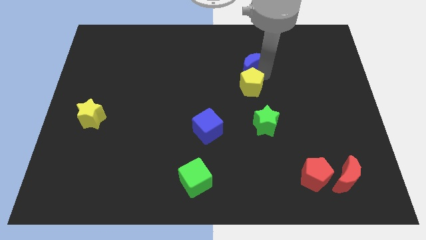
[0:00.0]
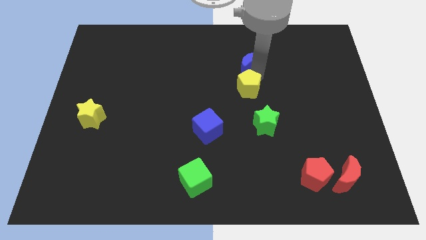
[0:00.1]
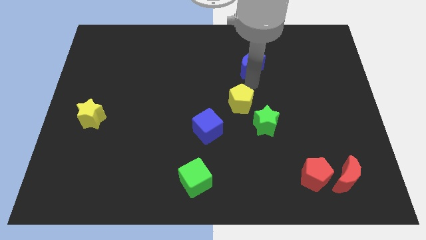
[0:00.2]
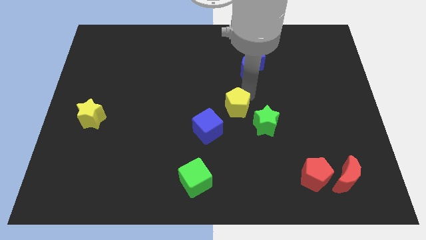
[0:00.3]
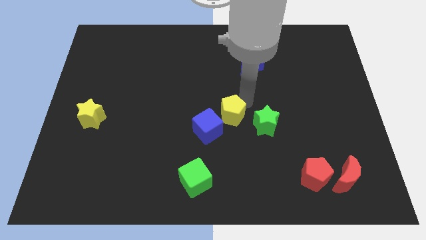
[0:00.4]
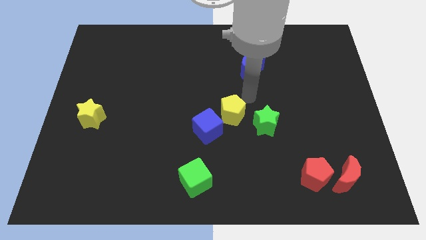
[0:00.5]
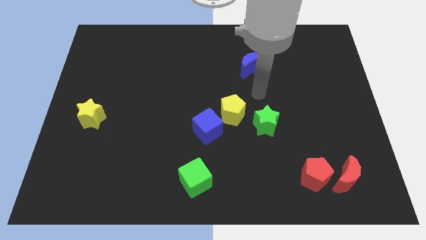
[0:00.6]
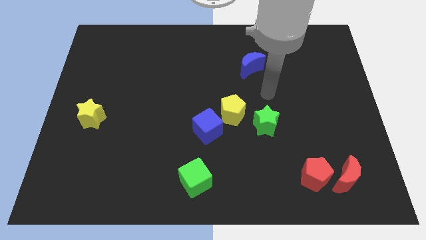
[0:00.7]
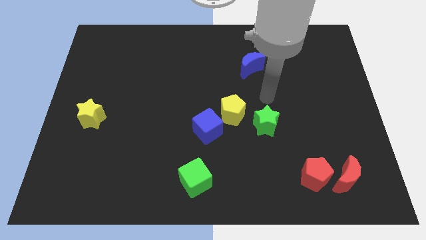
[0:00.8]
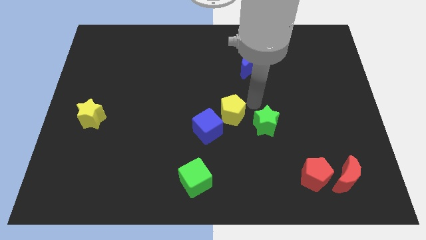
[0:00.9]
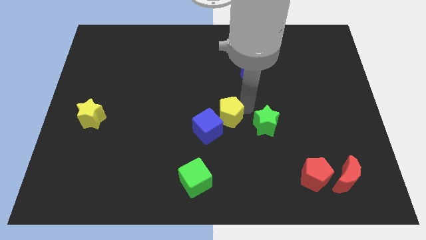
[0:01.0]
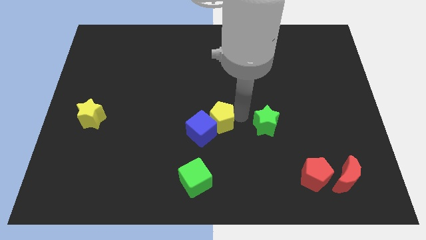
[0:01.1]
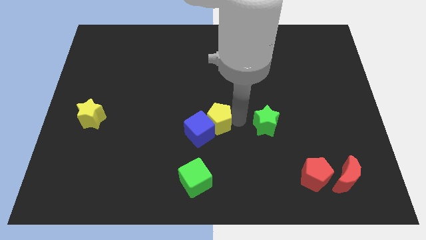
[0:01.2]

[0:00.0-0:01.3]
push the yellow pentagon into blue cube

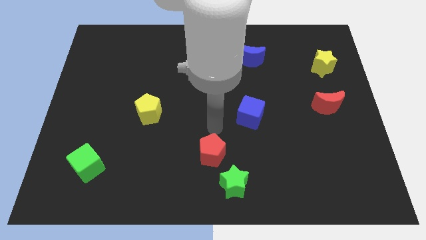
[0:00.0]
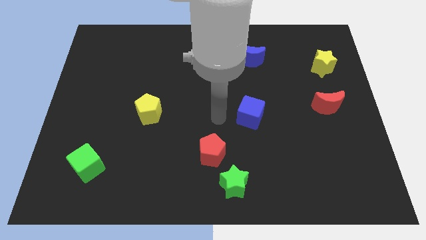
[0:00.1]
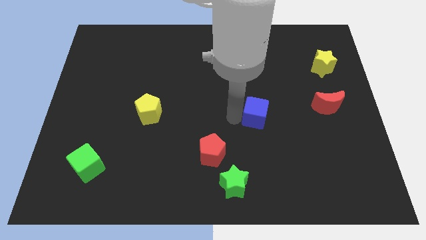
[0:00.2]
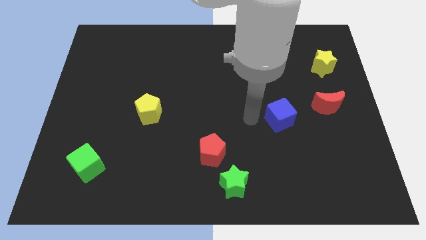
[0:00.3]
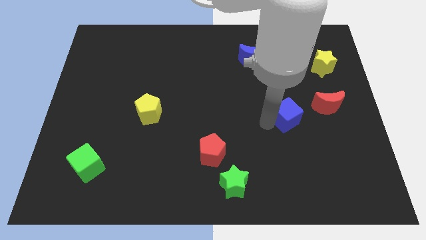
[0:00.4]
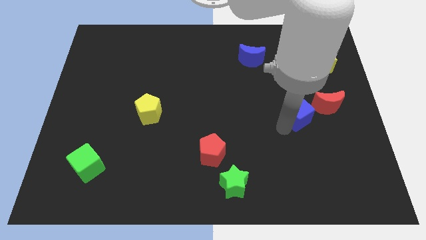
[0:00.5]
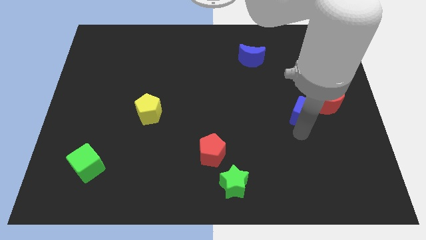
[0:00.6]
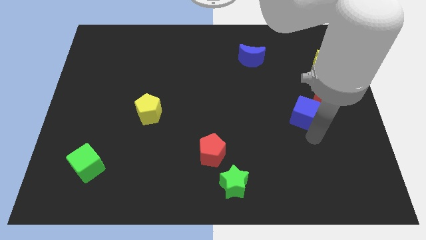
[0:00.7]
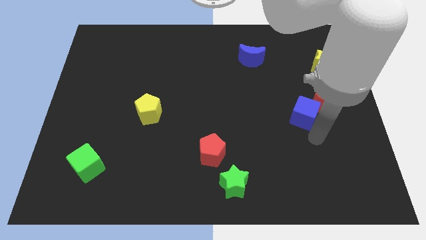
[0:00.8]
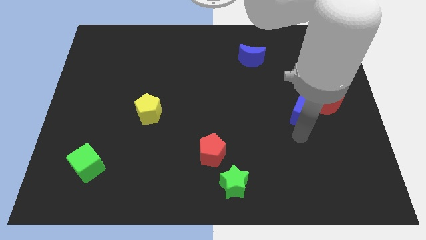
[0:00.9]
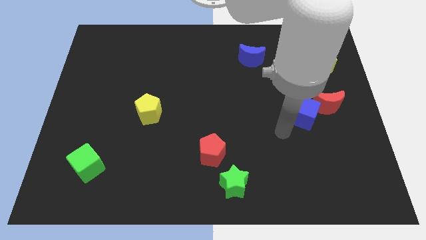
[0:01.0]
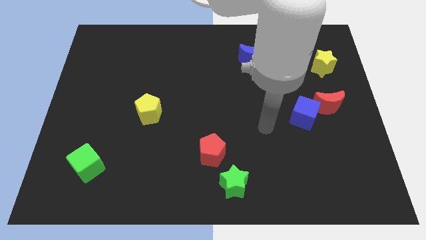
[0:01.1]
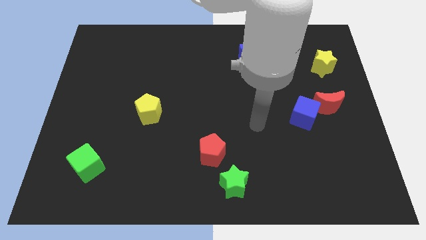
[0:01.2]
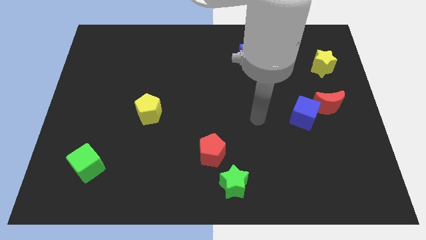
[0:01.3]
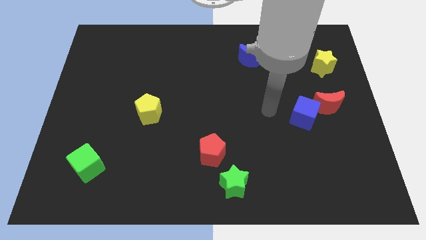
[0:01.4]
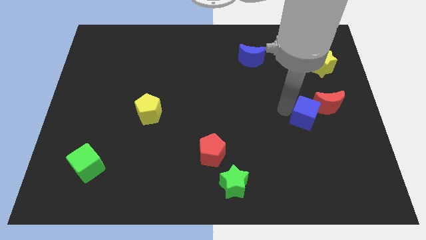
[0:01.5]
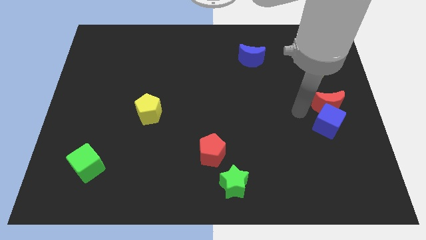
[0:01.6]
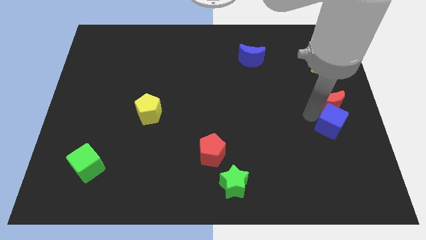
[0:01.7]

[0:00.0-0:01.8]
move the blue cube below red moon

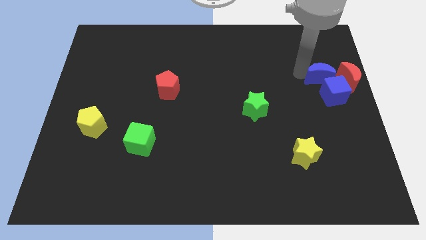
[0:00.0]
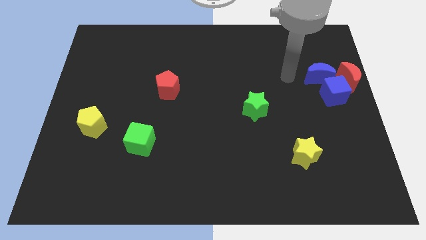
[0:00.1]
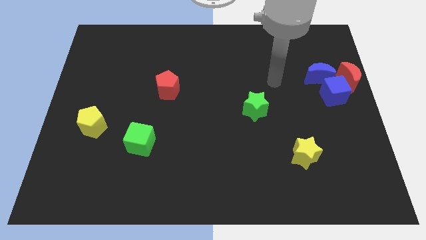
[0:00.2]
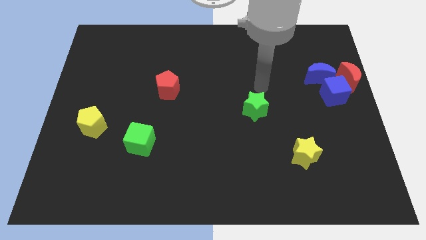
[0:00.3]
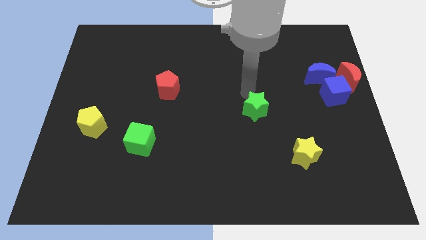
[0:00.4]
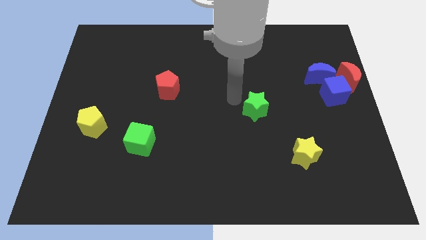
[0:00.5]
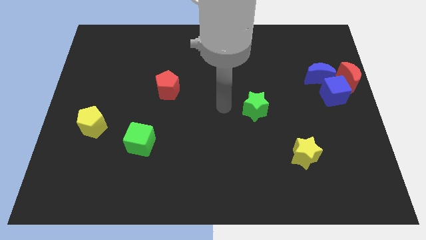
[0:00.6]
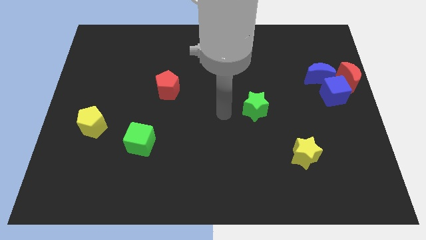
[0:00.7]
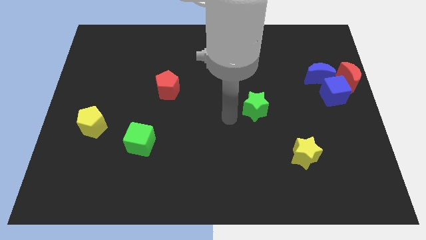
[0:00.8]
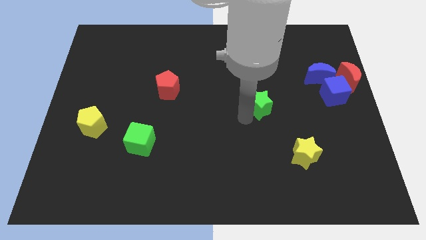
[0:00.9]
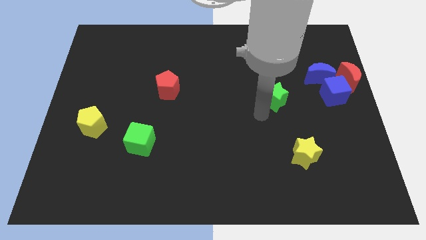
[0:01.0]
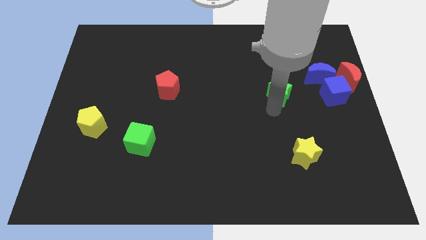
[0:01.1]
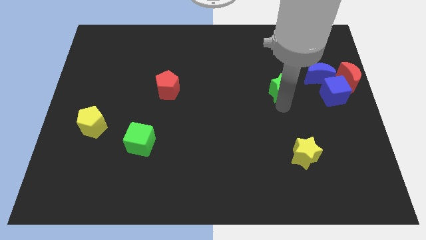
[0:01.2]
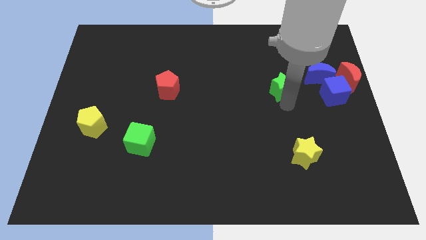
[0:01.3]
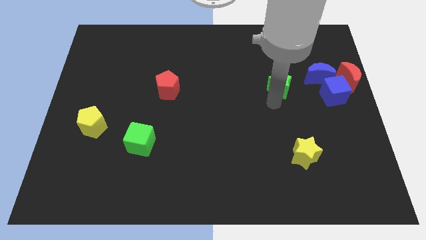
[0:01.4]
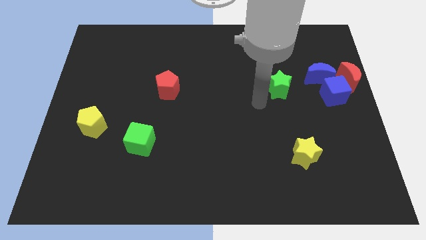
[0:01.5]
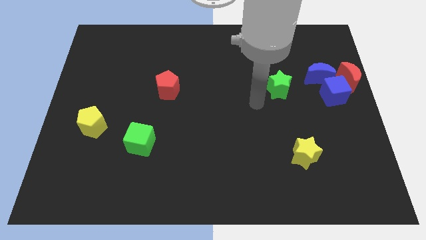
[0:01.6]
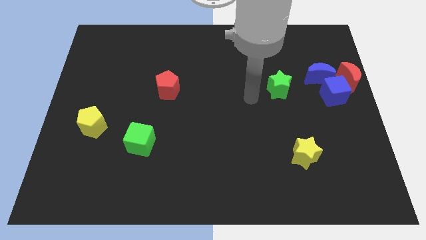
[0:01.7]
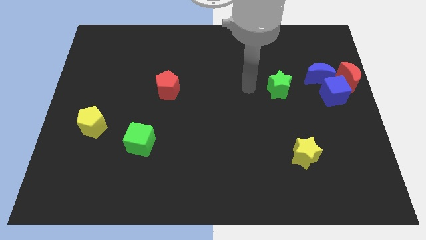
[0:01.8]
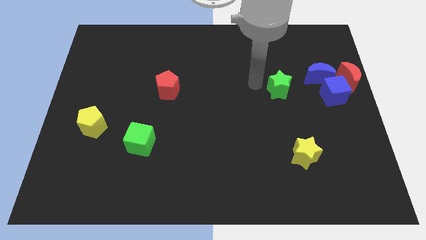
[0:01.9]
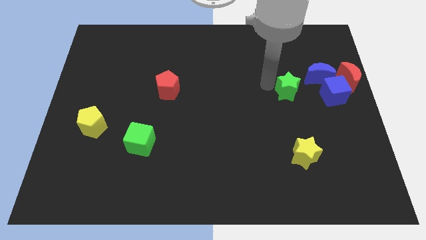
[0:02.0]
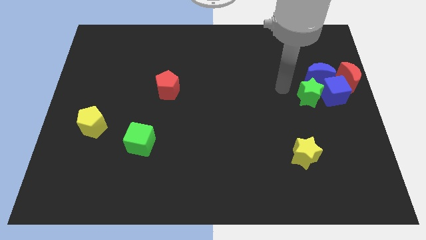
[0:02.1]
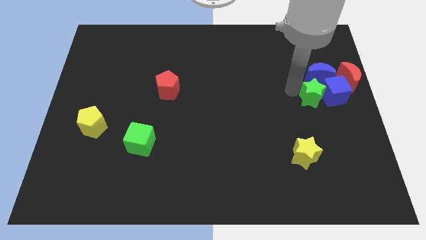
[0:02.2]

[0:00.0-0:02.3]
move the green star to the left of the blue cube

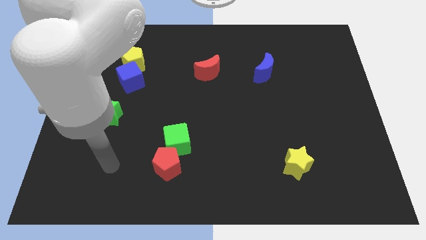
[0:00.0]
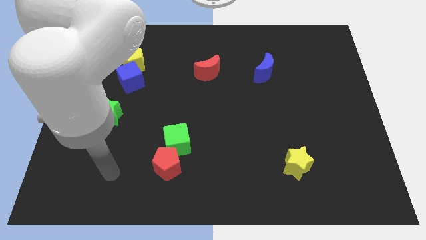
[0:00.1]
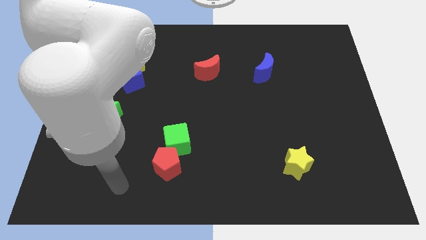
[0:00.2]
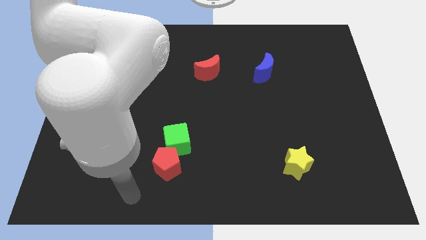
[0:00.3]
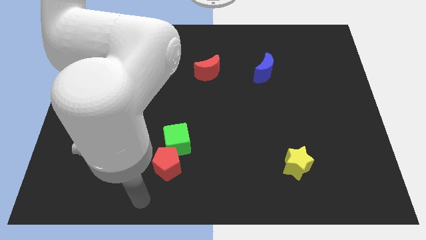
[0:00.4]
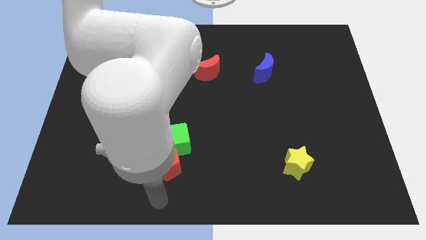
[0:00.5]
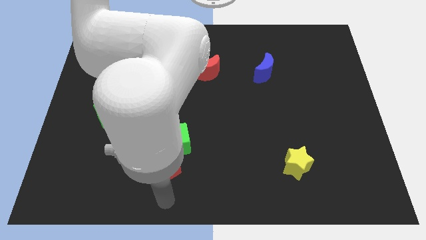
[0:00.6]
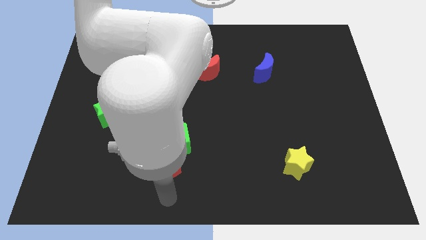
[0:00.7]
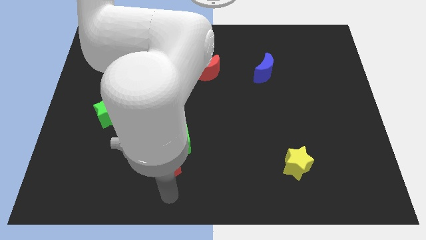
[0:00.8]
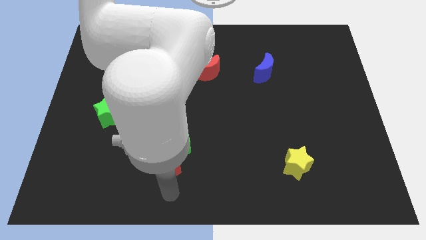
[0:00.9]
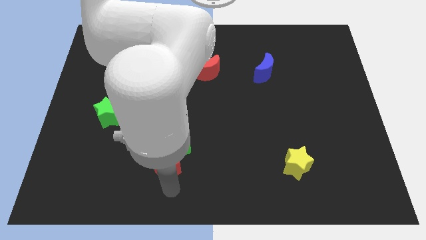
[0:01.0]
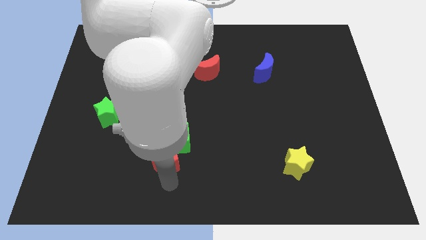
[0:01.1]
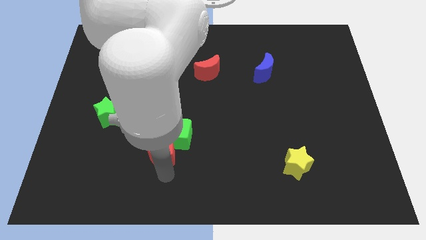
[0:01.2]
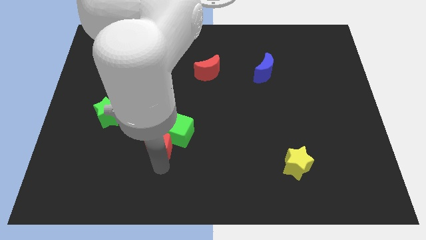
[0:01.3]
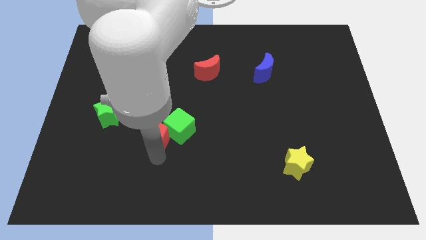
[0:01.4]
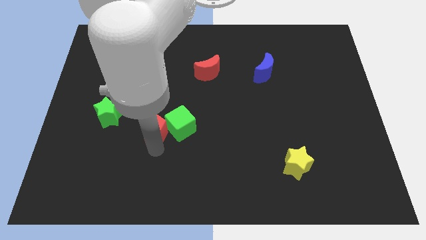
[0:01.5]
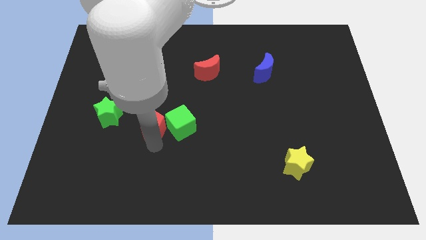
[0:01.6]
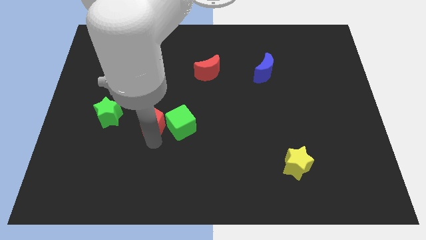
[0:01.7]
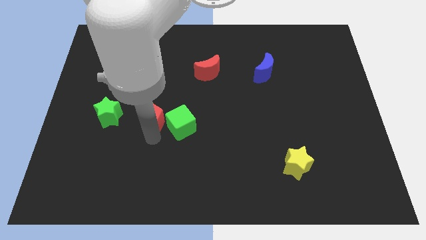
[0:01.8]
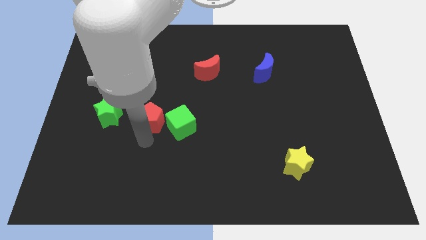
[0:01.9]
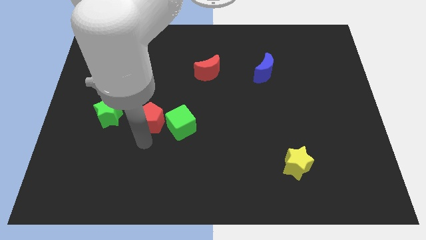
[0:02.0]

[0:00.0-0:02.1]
move red pentagon towards green cube

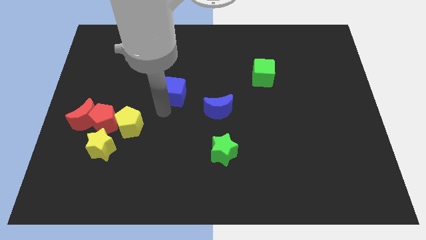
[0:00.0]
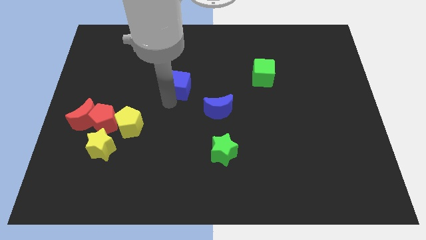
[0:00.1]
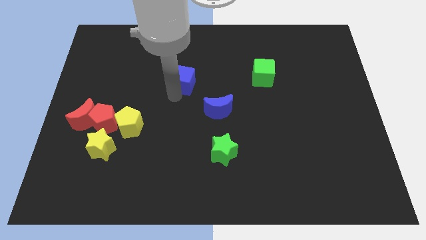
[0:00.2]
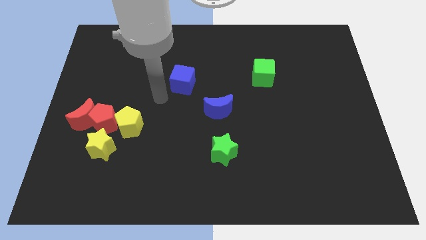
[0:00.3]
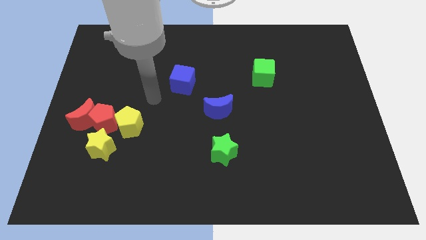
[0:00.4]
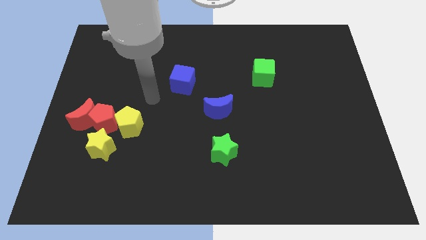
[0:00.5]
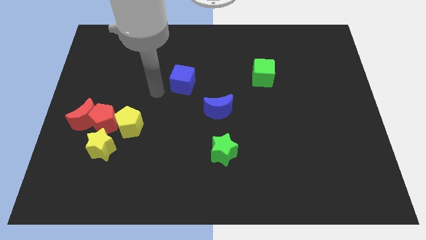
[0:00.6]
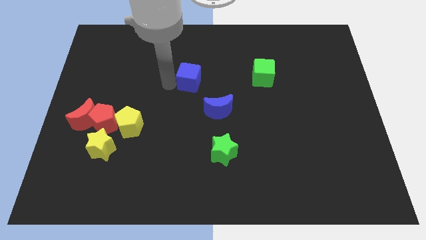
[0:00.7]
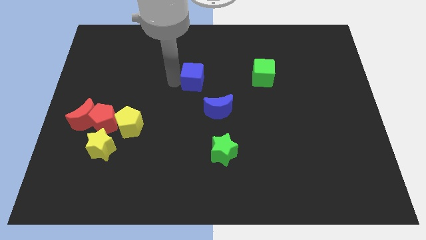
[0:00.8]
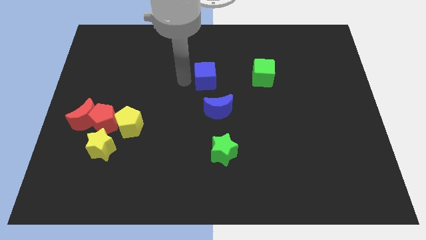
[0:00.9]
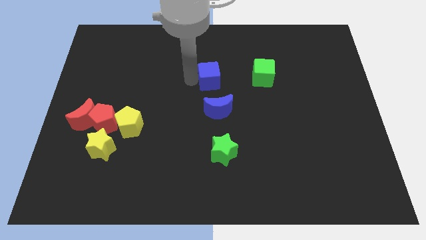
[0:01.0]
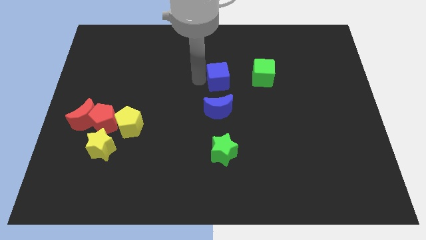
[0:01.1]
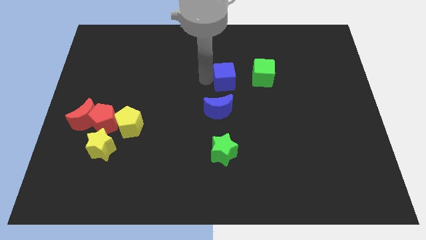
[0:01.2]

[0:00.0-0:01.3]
place the blue cube above the blue moon
